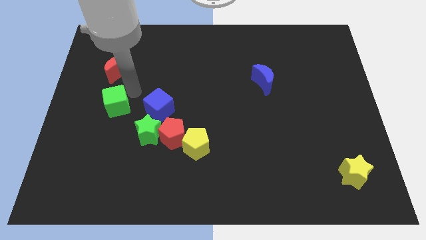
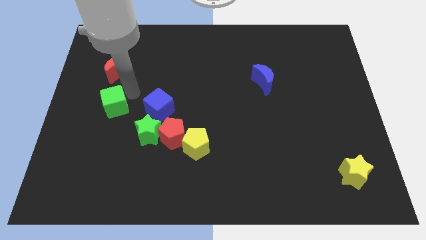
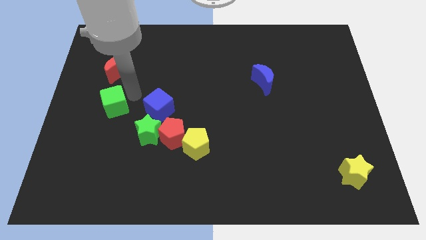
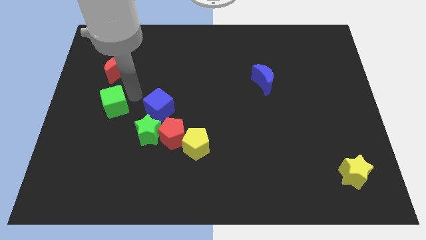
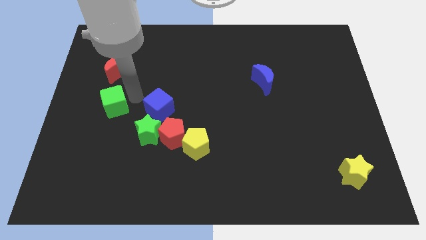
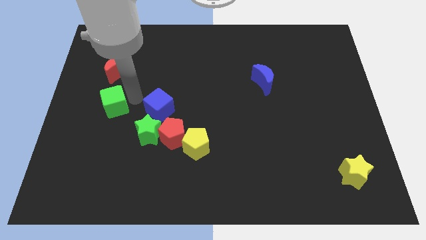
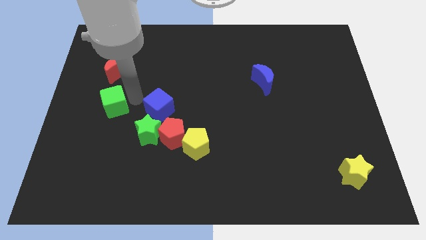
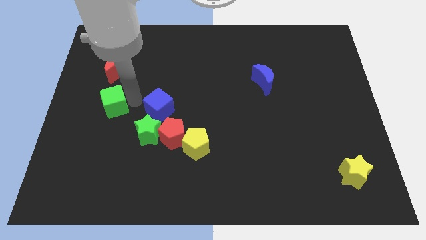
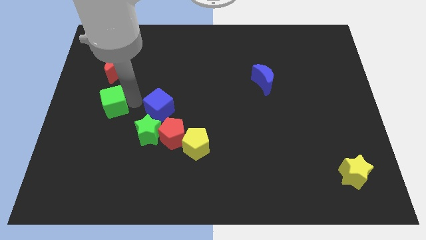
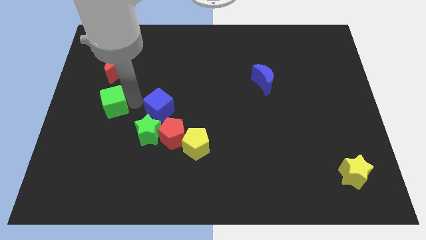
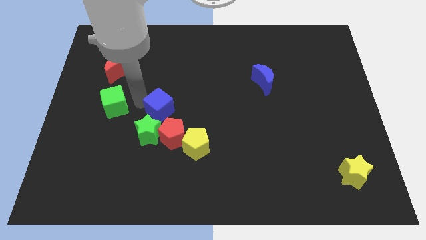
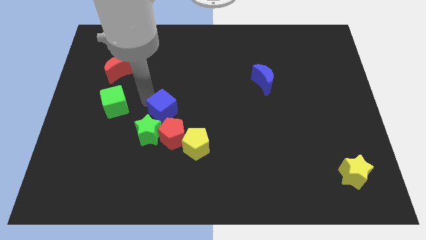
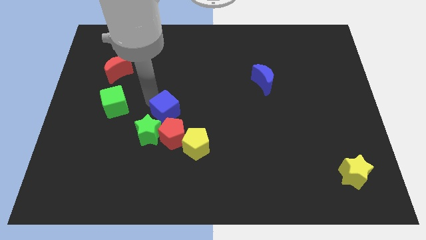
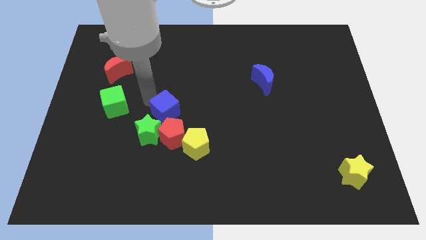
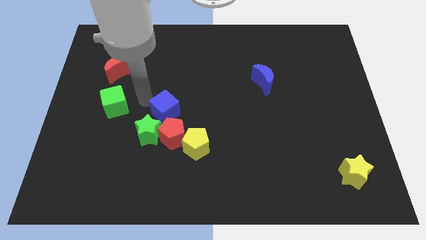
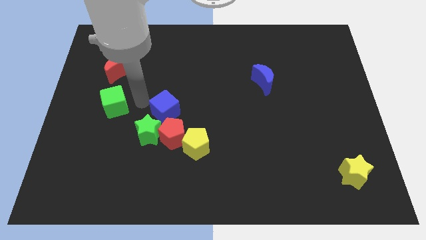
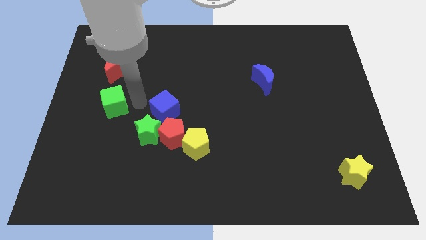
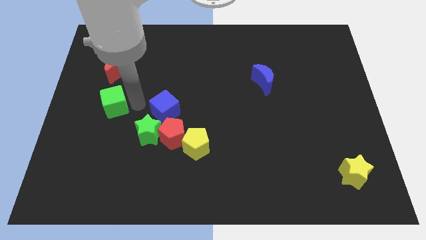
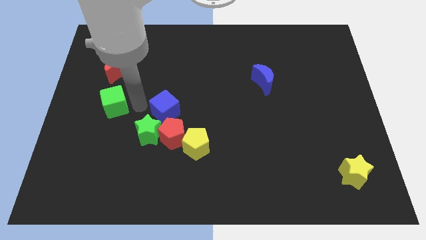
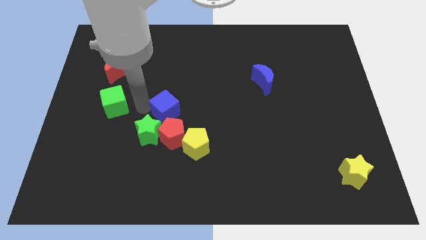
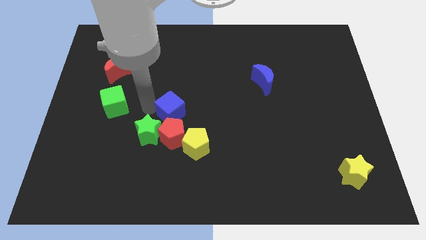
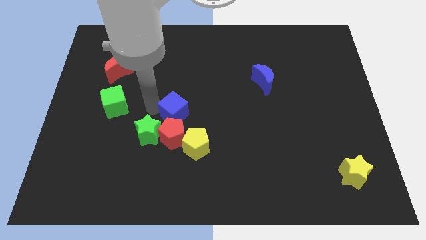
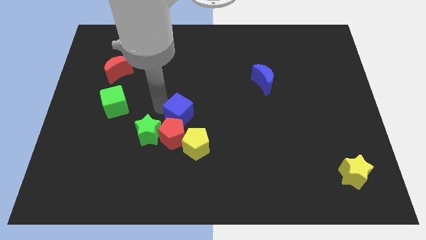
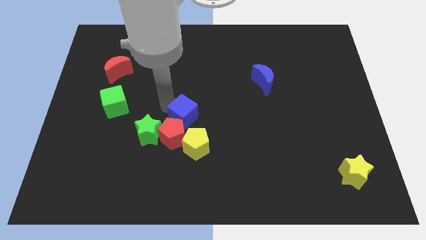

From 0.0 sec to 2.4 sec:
place the blue cube above the red pentagon

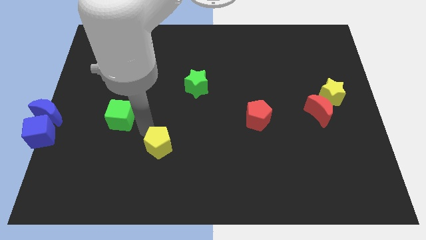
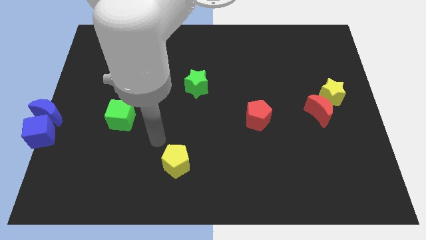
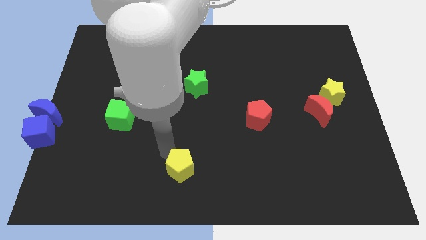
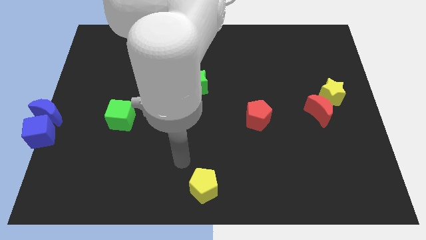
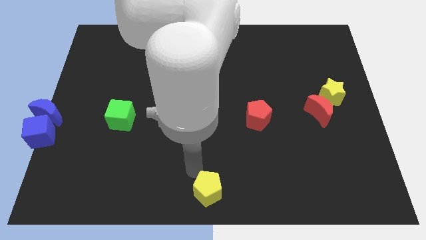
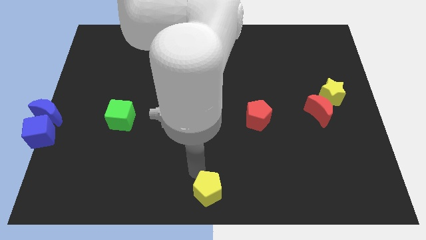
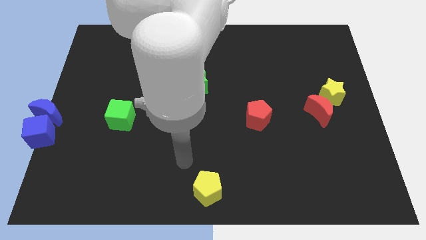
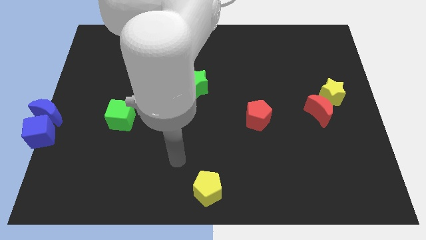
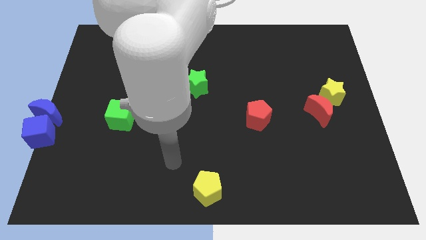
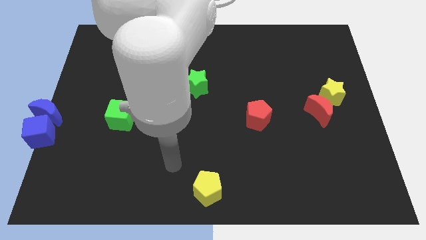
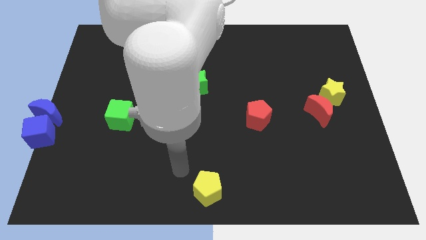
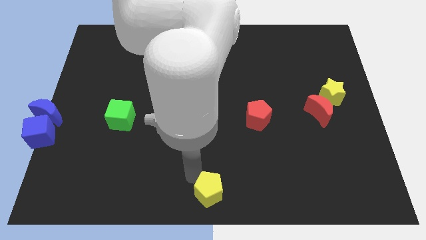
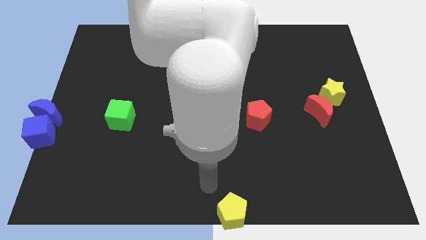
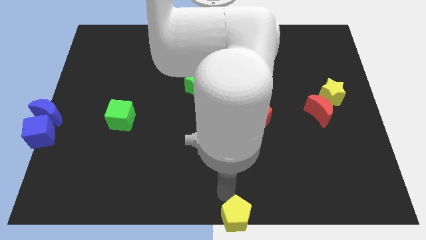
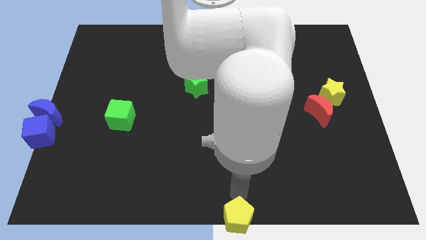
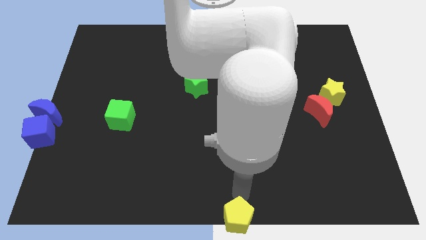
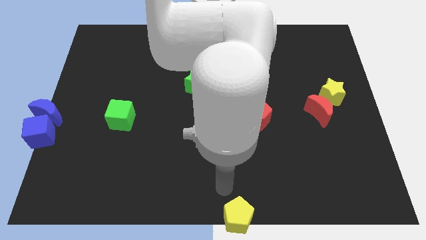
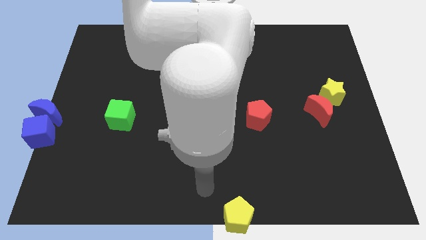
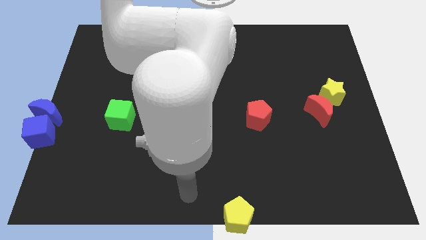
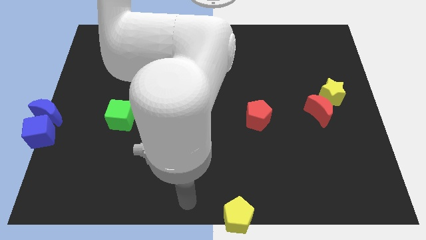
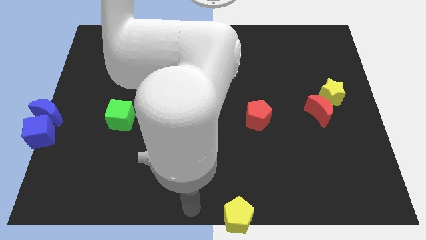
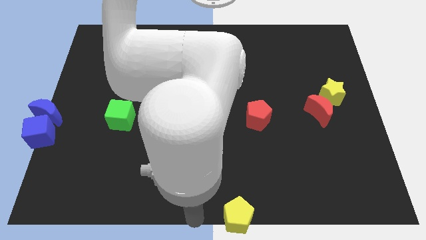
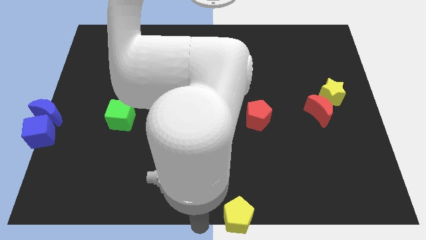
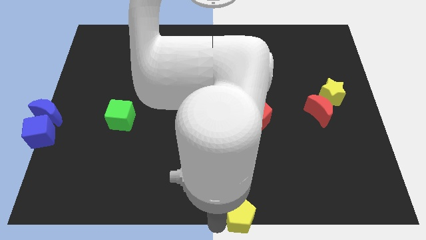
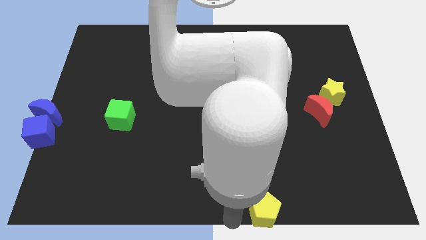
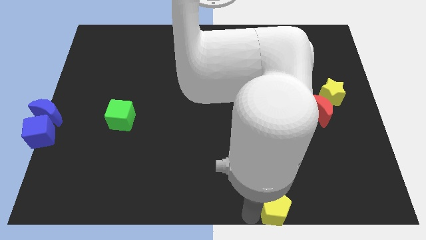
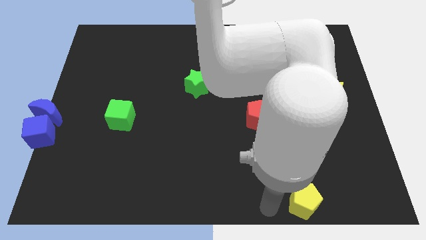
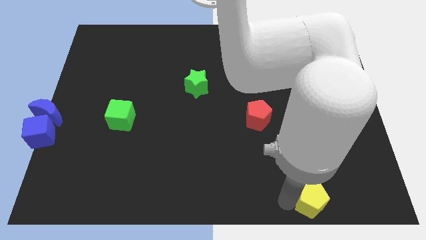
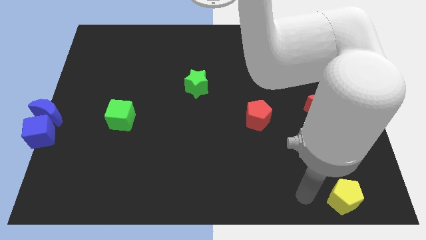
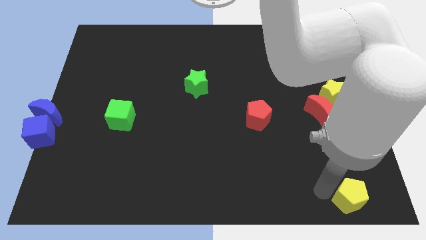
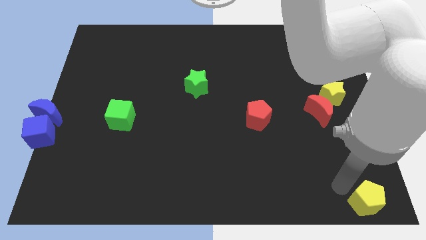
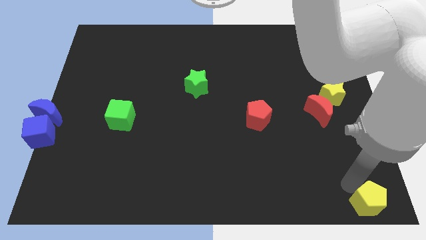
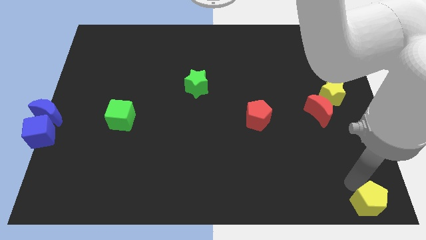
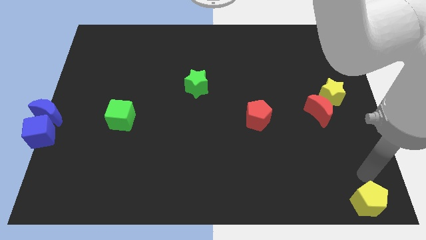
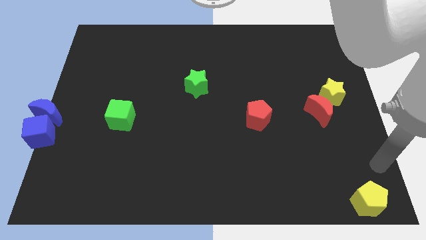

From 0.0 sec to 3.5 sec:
place the yellow pentagon to the bottom right side

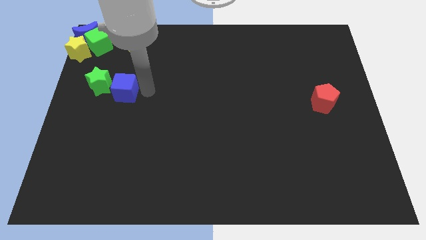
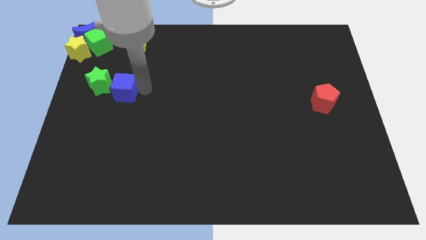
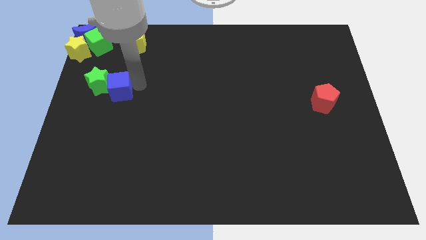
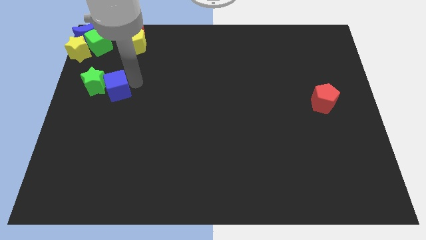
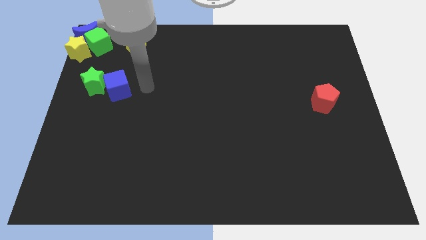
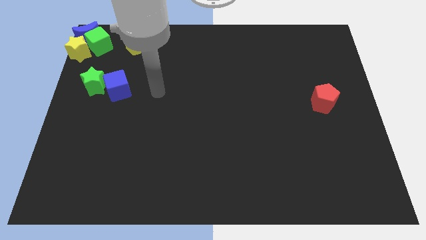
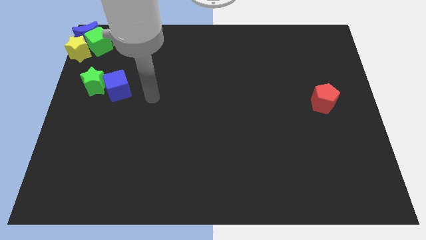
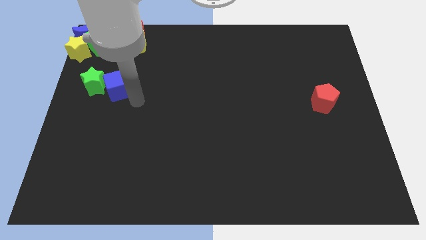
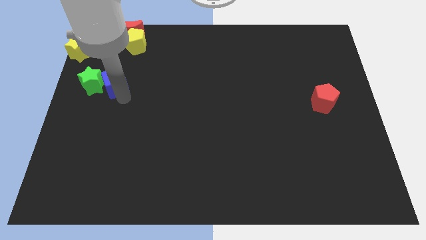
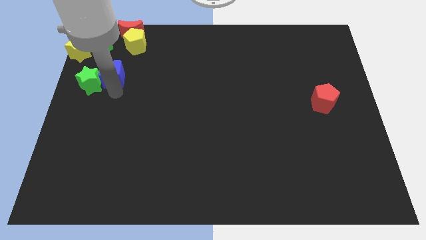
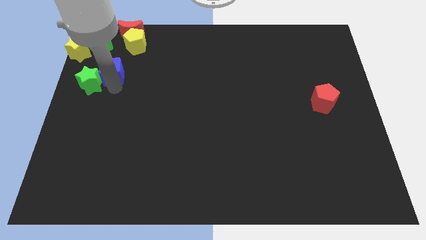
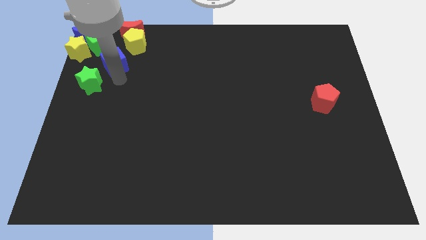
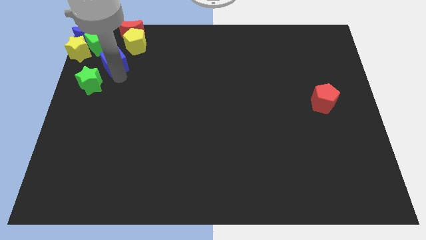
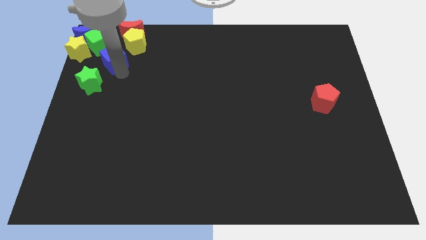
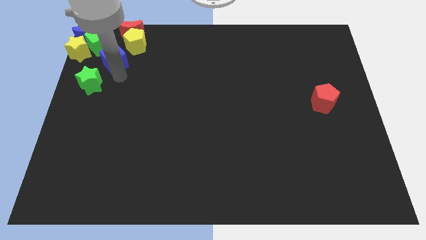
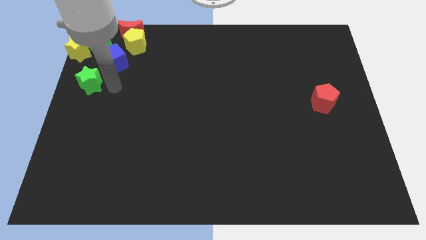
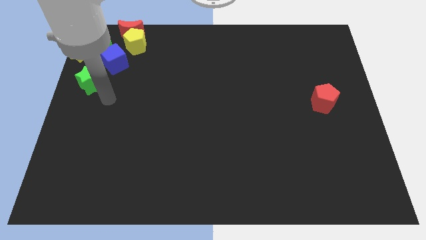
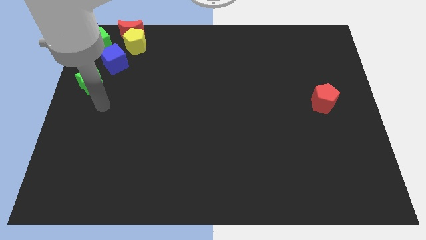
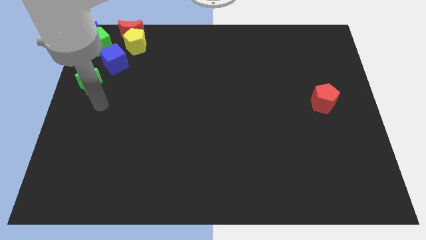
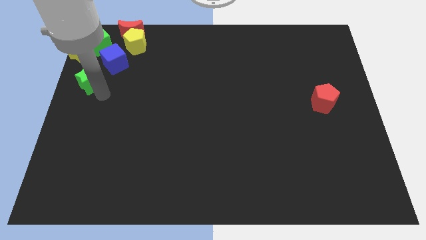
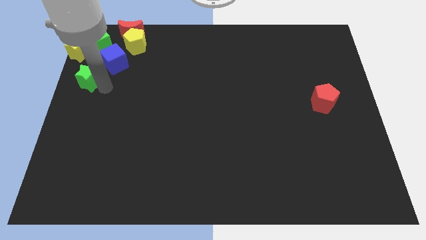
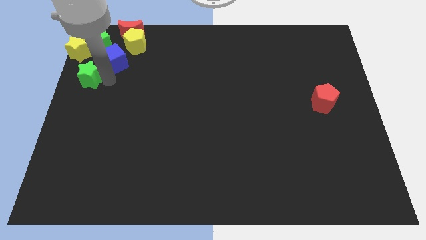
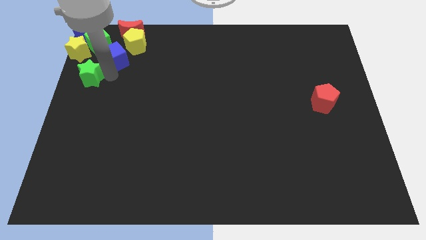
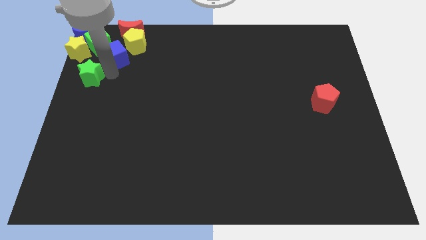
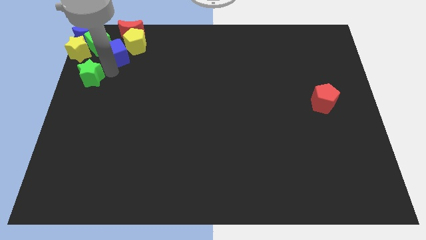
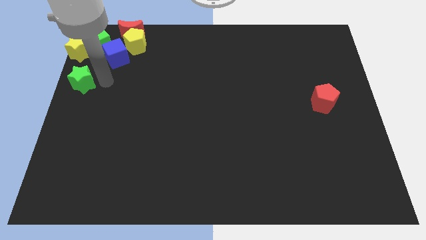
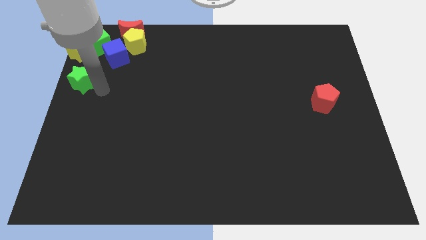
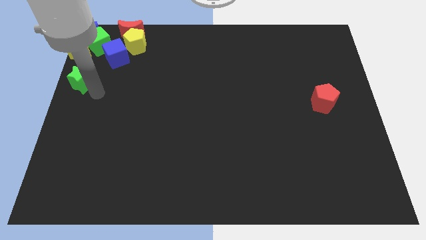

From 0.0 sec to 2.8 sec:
move the blue cube bottom right to the green cube

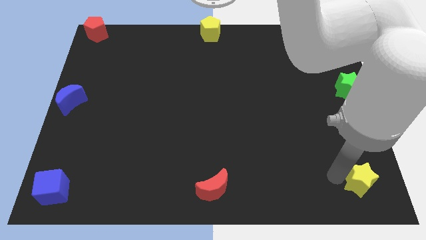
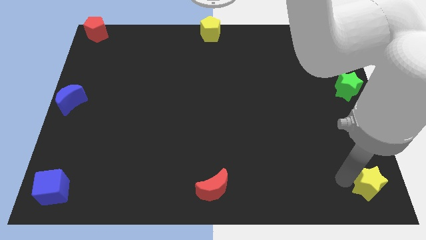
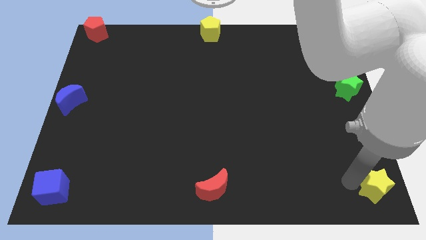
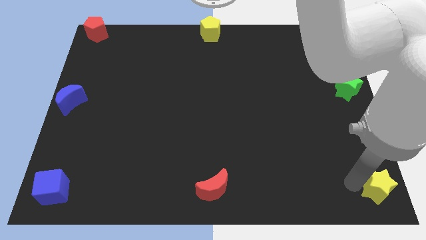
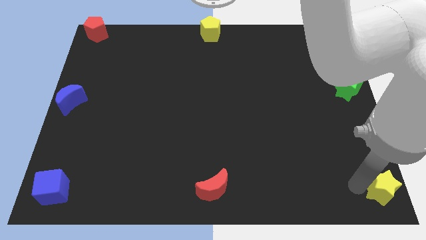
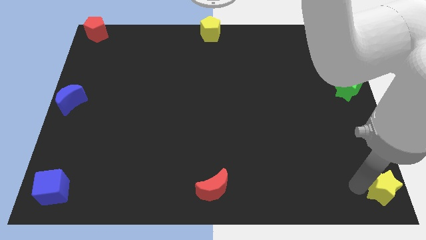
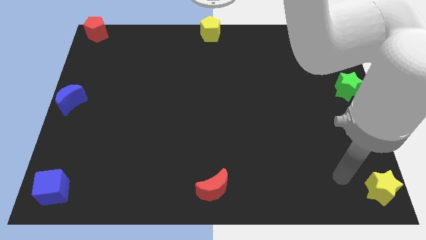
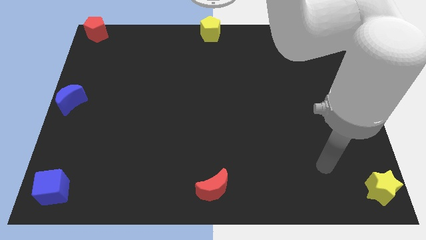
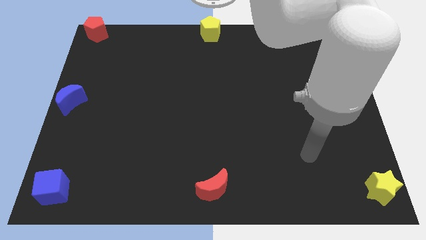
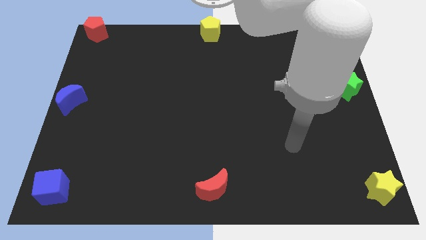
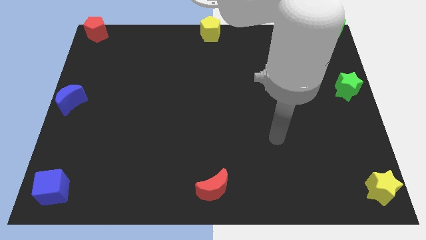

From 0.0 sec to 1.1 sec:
move the yellow star towards the bottom right side of the board
